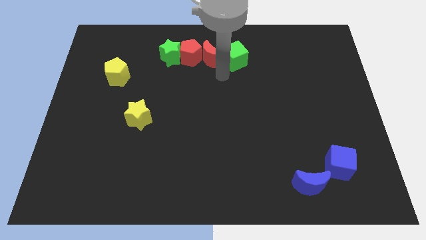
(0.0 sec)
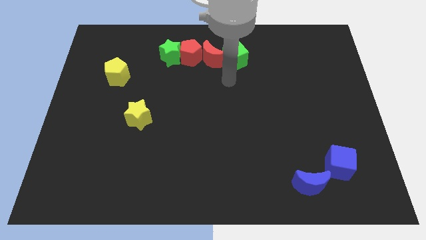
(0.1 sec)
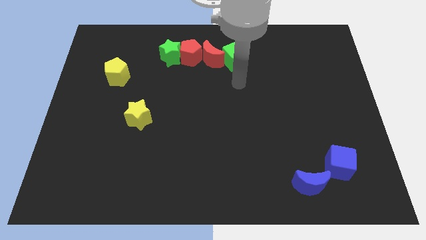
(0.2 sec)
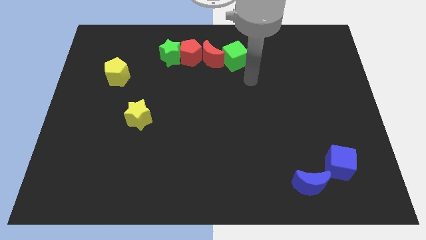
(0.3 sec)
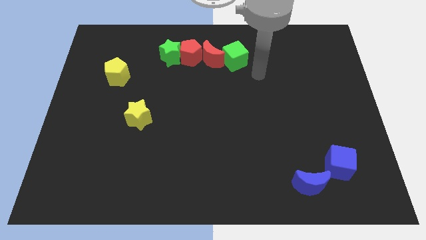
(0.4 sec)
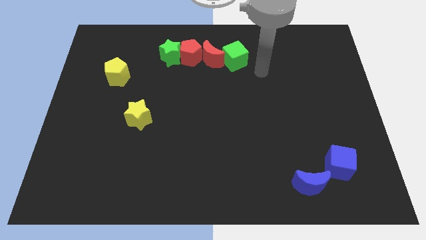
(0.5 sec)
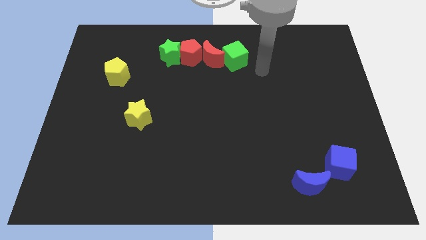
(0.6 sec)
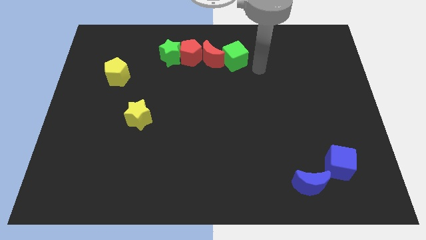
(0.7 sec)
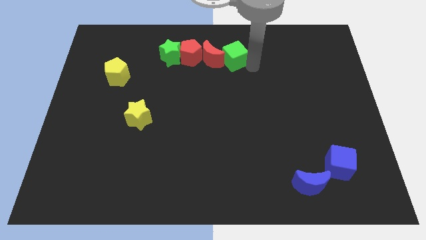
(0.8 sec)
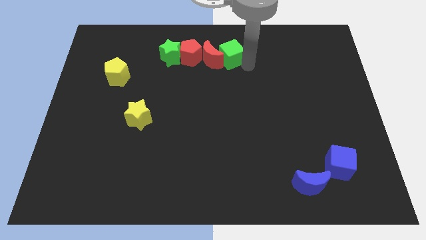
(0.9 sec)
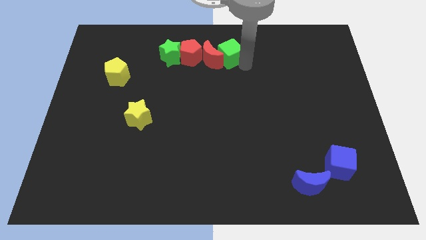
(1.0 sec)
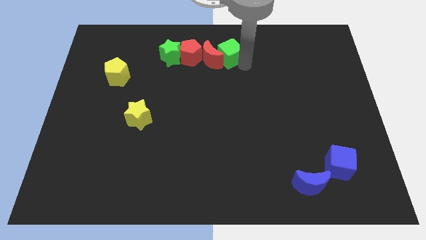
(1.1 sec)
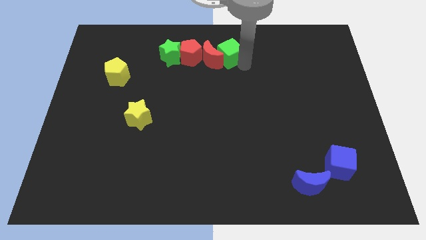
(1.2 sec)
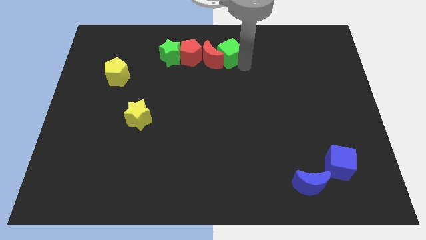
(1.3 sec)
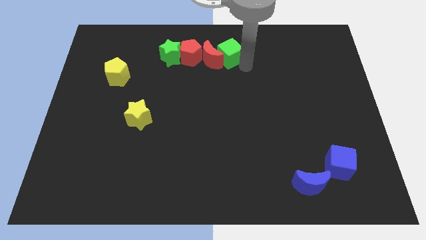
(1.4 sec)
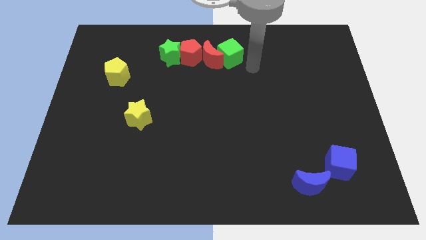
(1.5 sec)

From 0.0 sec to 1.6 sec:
push the green cube right to the red crescent

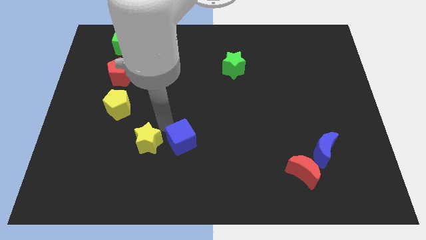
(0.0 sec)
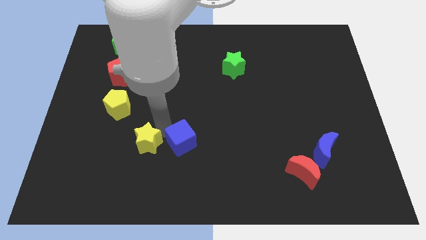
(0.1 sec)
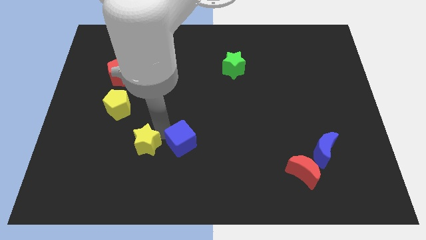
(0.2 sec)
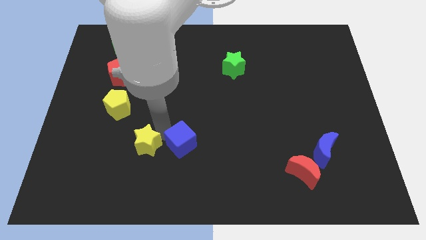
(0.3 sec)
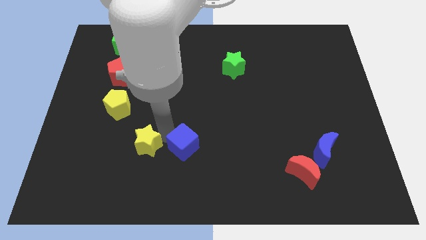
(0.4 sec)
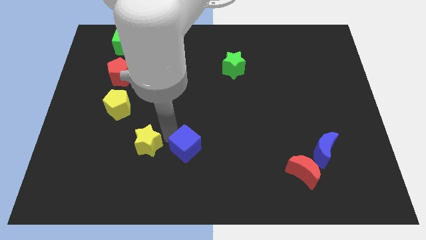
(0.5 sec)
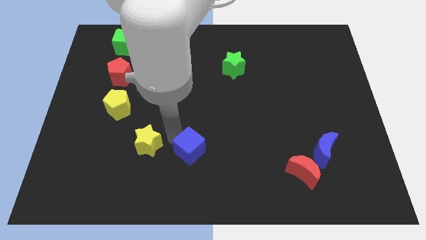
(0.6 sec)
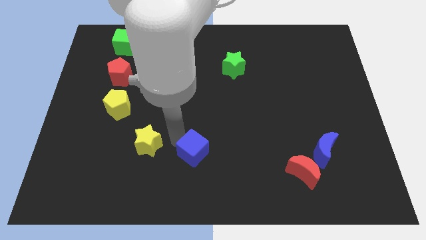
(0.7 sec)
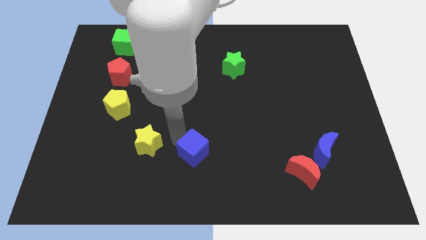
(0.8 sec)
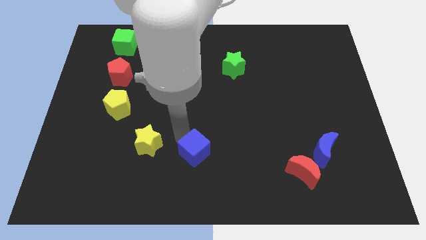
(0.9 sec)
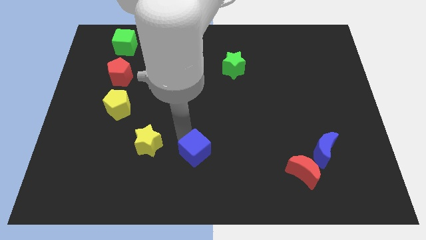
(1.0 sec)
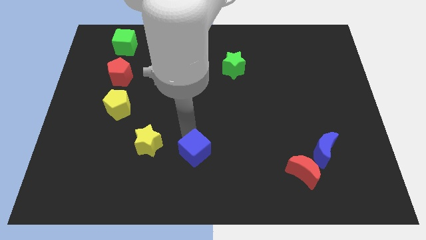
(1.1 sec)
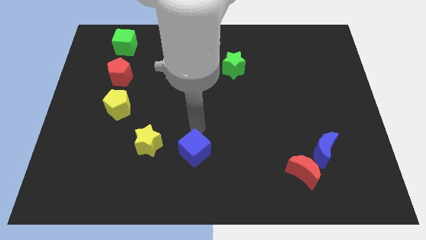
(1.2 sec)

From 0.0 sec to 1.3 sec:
push the blue cube to the bottom

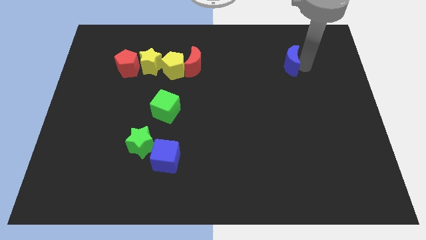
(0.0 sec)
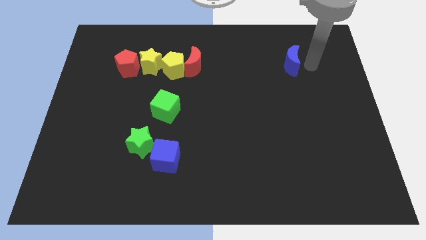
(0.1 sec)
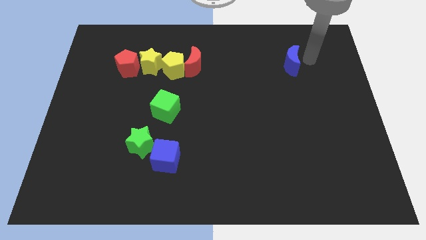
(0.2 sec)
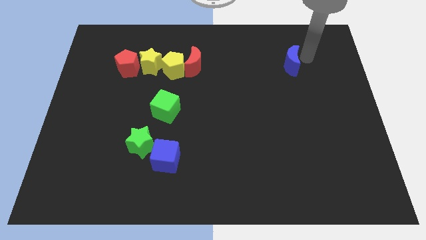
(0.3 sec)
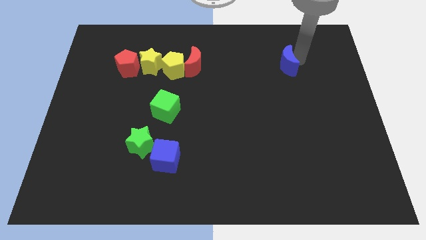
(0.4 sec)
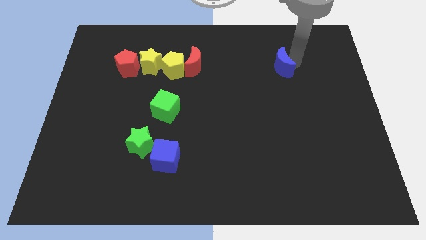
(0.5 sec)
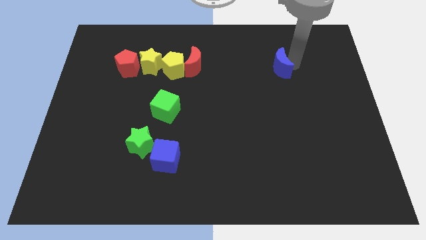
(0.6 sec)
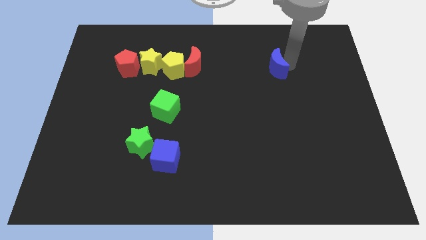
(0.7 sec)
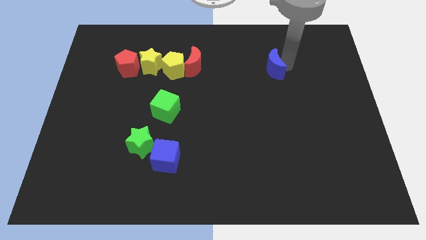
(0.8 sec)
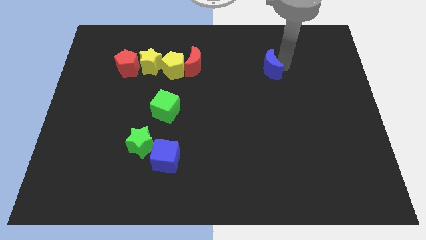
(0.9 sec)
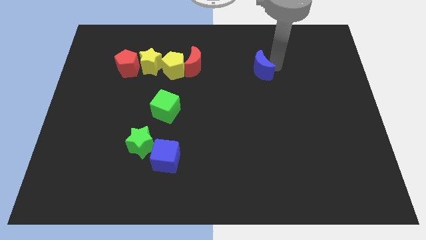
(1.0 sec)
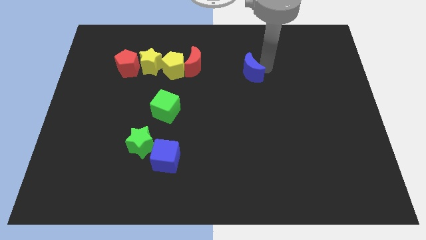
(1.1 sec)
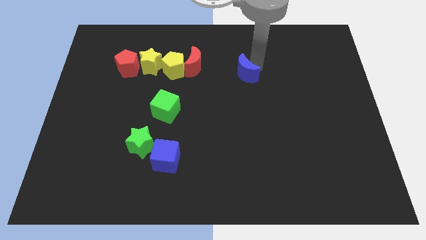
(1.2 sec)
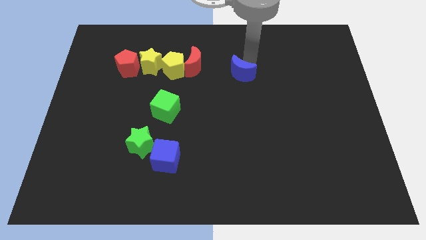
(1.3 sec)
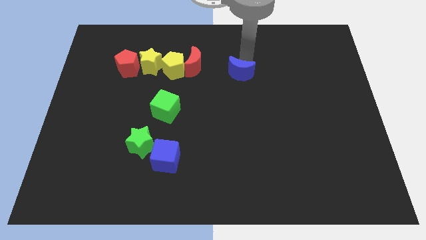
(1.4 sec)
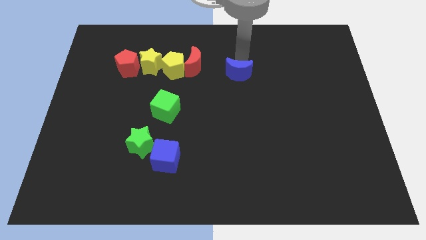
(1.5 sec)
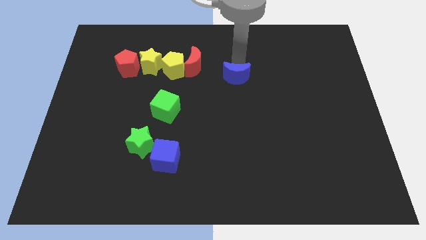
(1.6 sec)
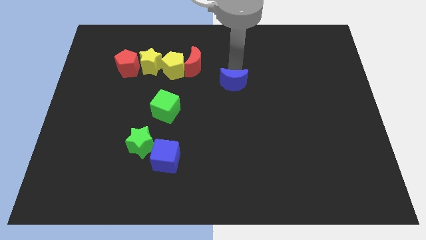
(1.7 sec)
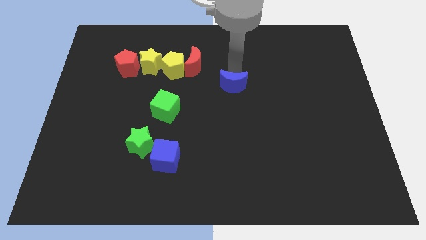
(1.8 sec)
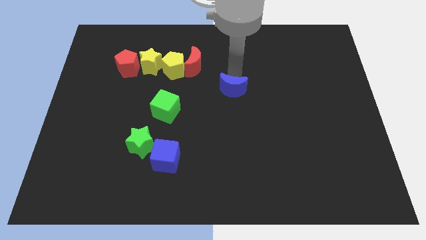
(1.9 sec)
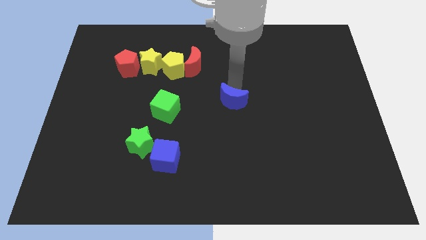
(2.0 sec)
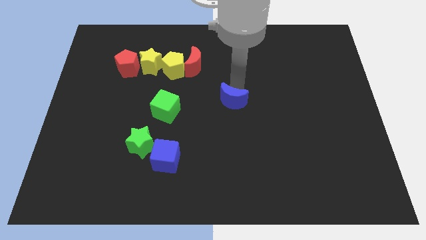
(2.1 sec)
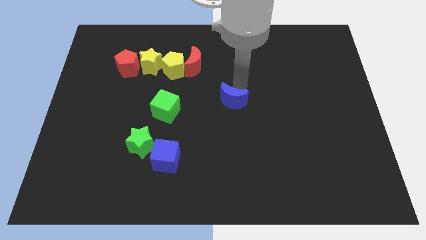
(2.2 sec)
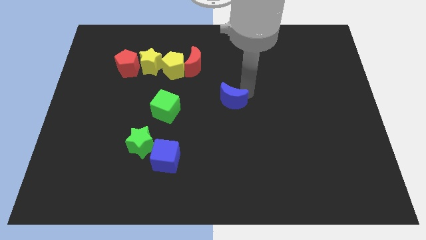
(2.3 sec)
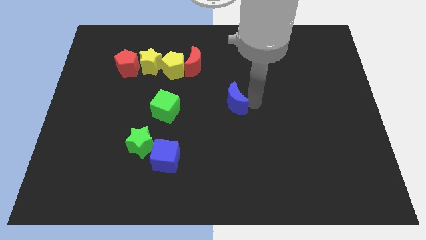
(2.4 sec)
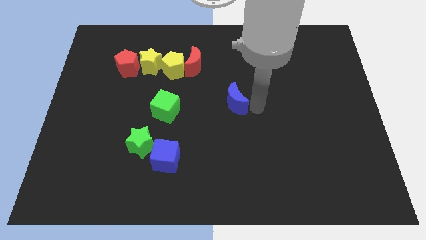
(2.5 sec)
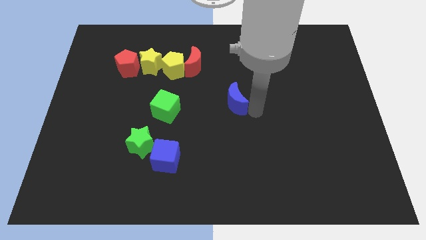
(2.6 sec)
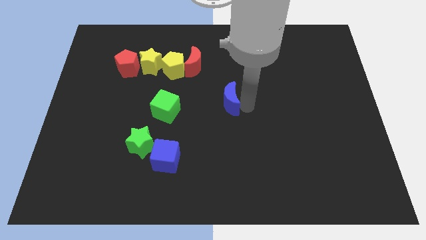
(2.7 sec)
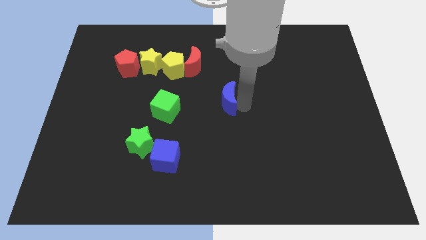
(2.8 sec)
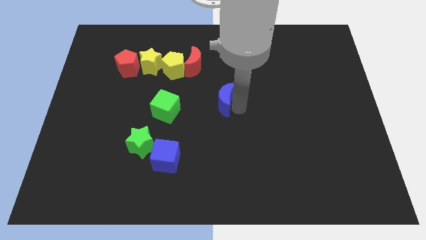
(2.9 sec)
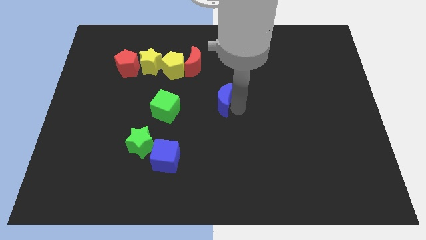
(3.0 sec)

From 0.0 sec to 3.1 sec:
move the blue moon diagonally to the top right of the blue cube

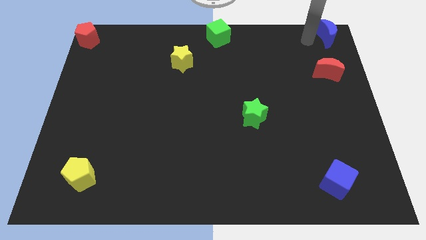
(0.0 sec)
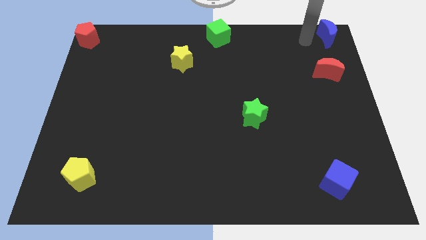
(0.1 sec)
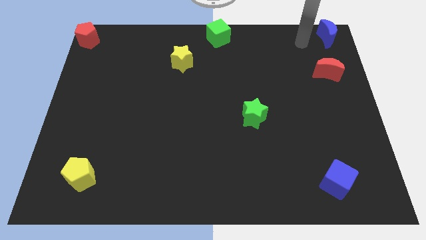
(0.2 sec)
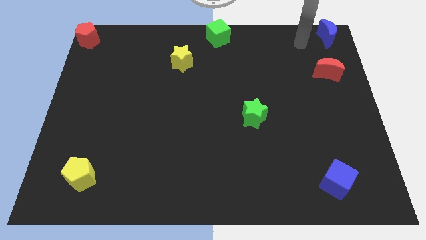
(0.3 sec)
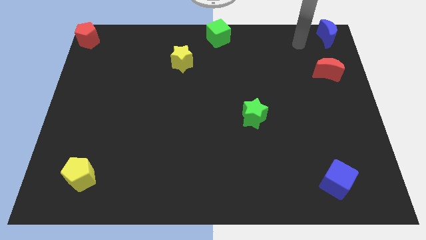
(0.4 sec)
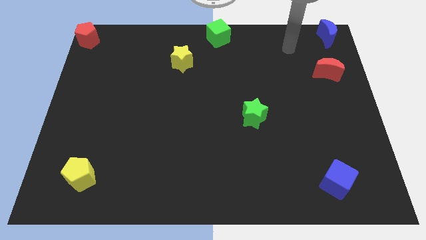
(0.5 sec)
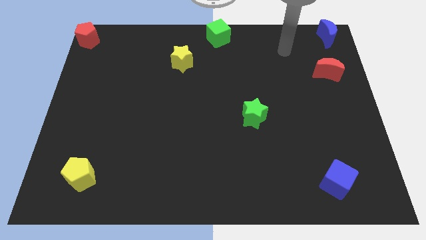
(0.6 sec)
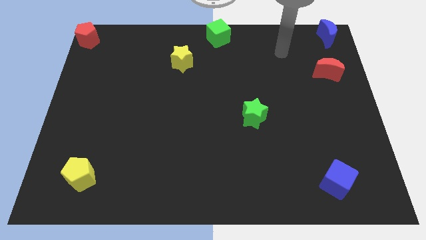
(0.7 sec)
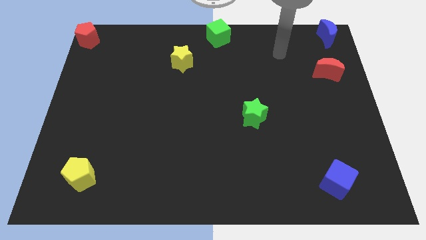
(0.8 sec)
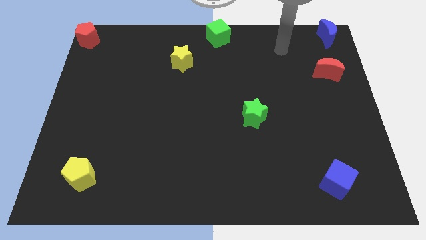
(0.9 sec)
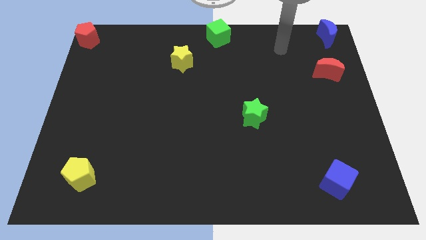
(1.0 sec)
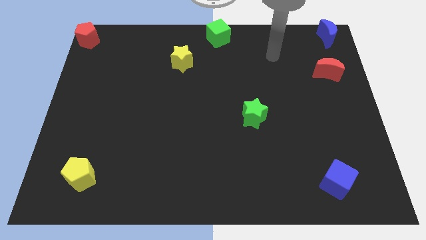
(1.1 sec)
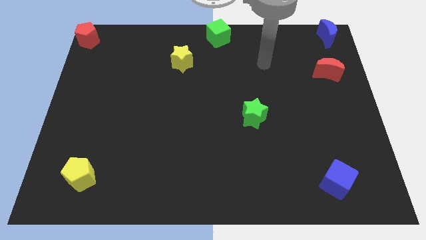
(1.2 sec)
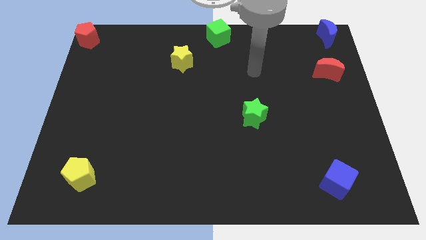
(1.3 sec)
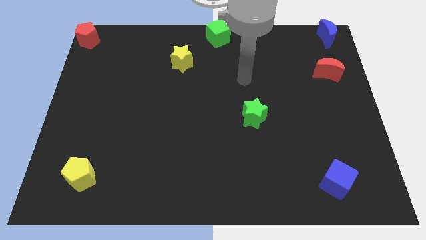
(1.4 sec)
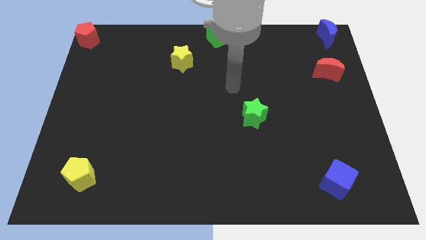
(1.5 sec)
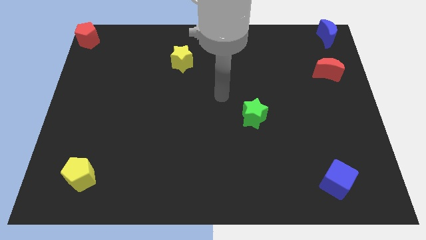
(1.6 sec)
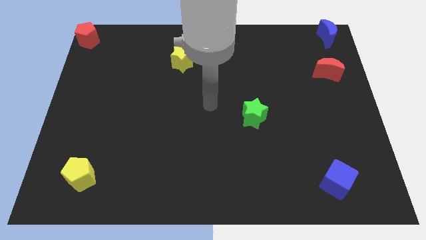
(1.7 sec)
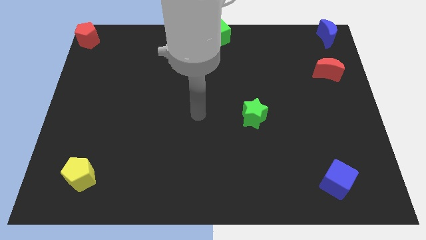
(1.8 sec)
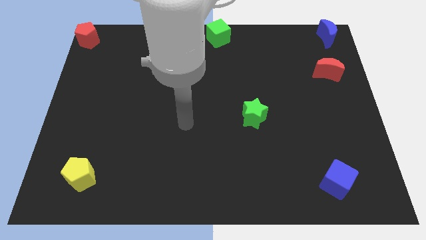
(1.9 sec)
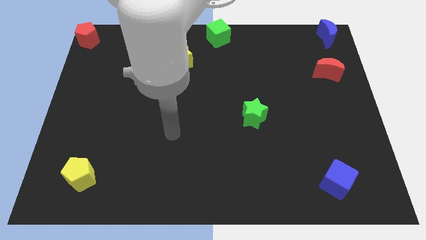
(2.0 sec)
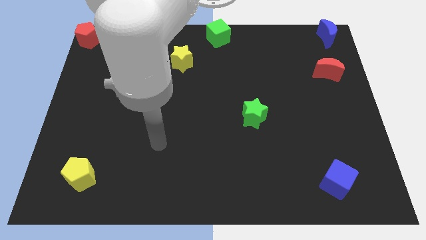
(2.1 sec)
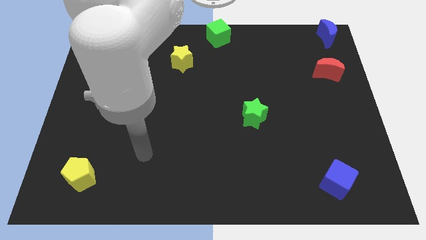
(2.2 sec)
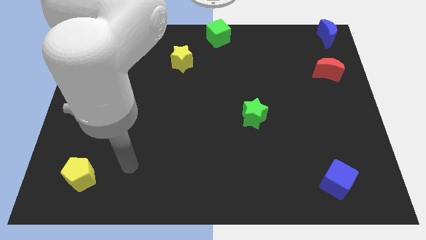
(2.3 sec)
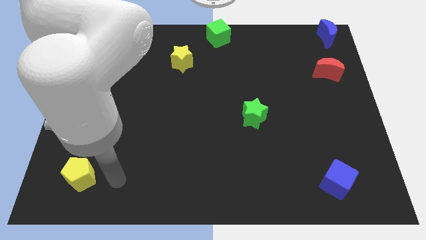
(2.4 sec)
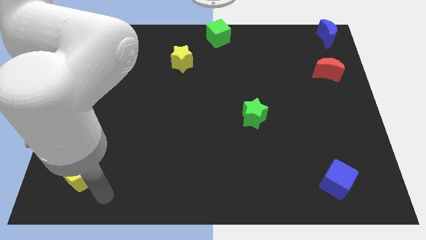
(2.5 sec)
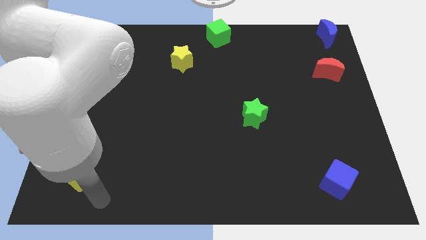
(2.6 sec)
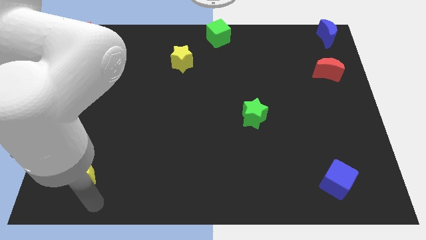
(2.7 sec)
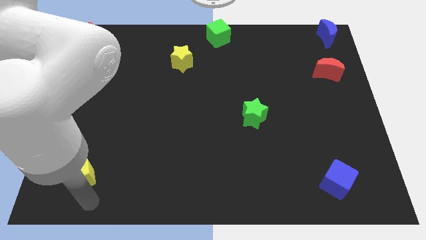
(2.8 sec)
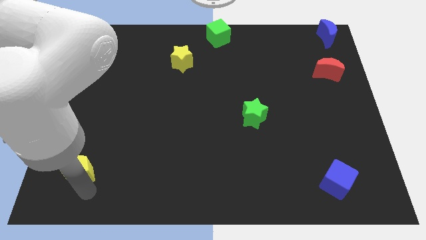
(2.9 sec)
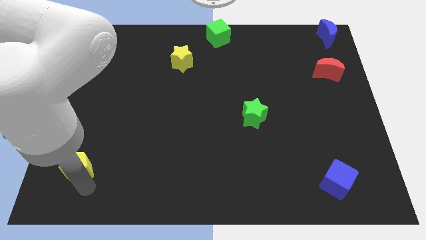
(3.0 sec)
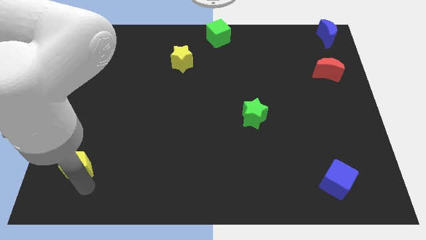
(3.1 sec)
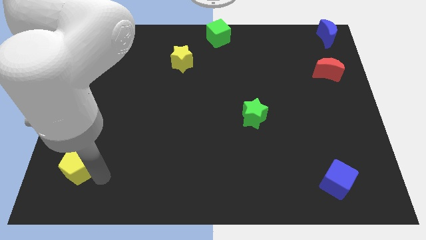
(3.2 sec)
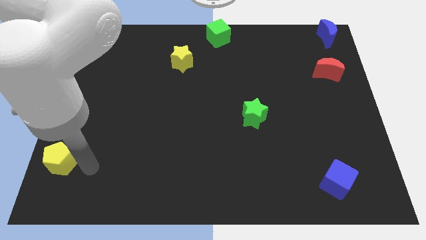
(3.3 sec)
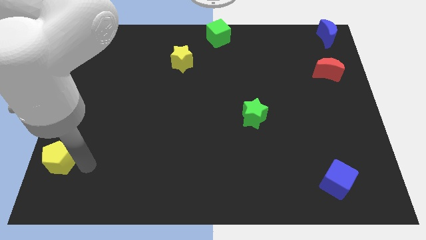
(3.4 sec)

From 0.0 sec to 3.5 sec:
push the yellow pentagon slightly to the left side of the table
